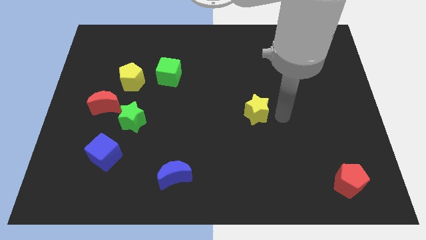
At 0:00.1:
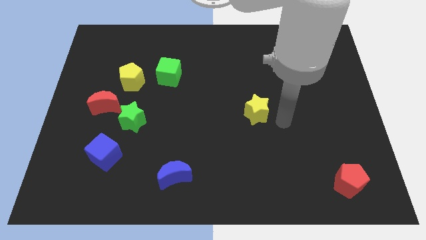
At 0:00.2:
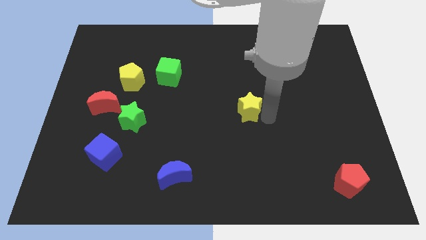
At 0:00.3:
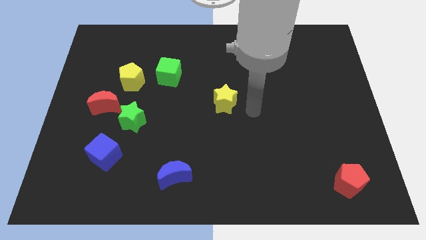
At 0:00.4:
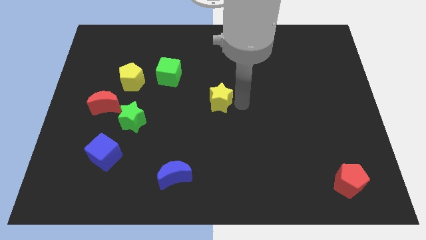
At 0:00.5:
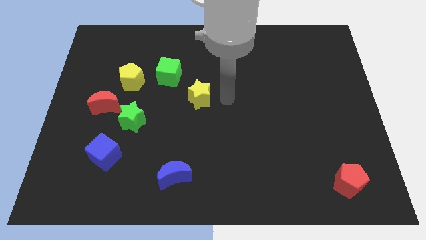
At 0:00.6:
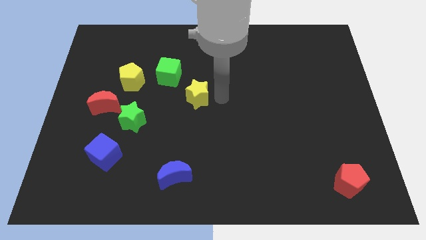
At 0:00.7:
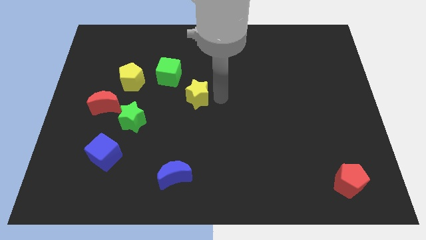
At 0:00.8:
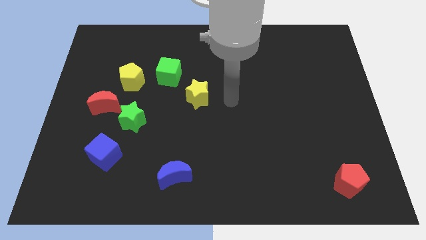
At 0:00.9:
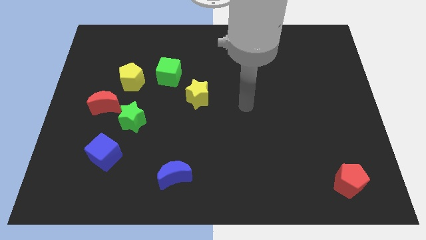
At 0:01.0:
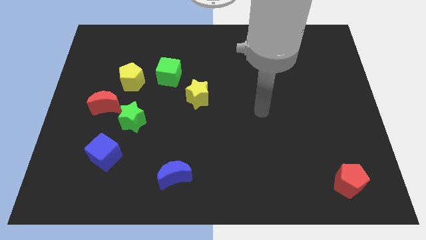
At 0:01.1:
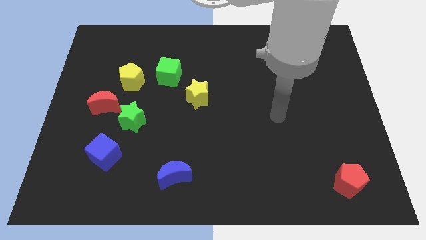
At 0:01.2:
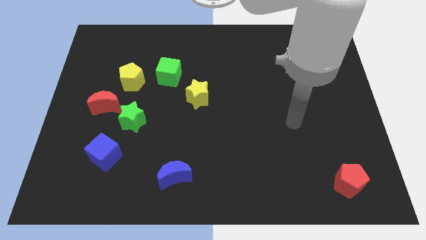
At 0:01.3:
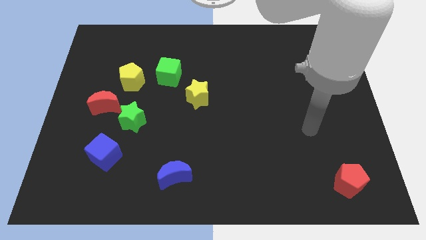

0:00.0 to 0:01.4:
place the yellow star diagonally on the bottom right side of the green cube

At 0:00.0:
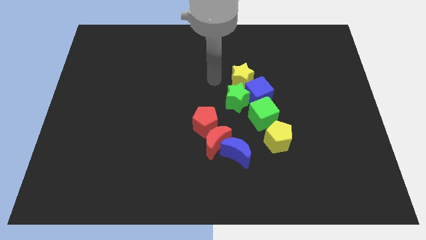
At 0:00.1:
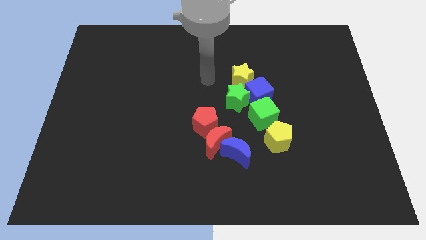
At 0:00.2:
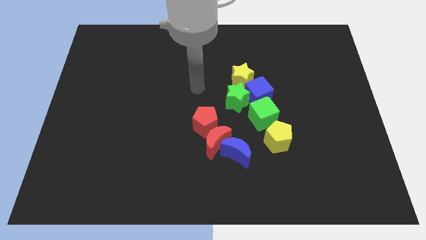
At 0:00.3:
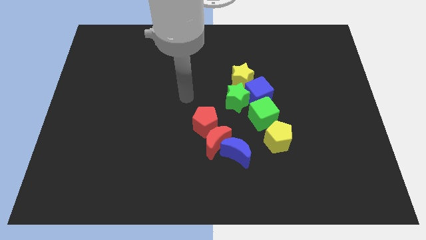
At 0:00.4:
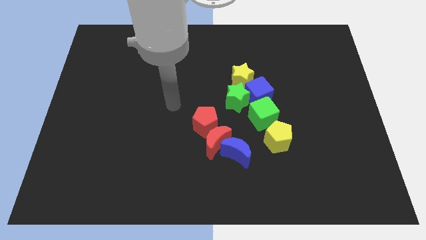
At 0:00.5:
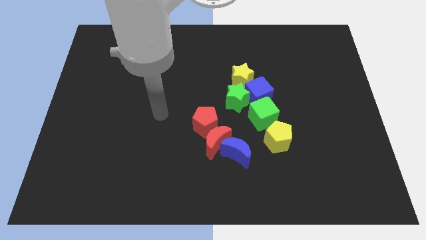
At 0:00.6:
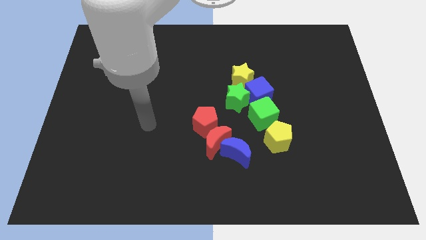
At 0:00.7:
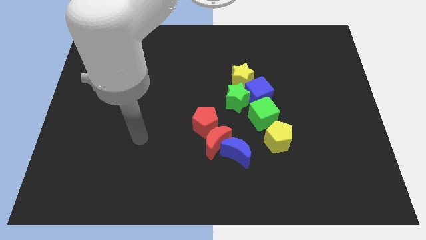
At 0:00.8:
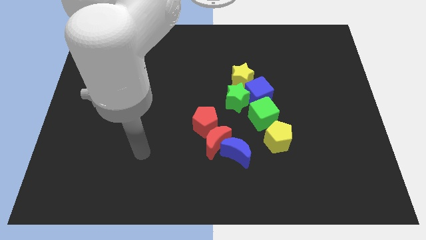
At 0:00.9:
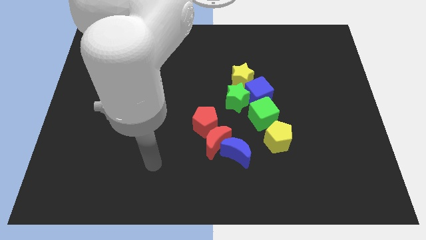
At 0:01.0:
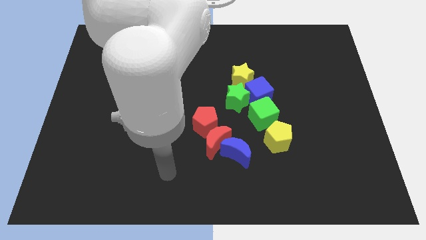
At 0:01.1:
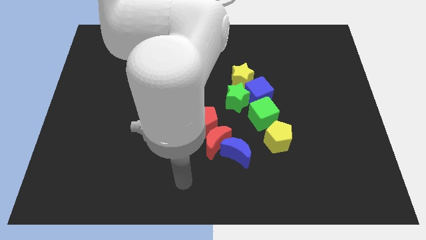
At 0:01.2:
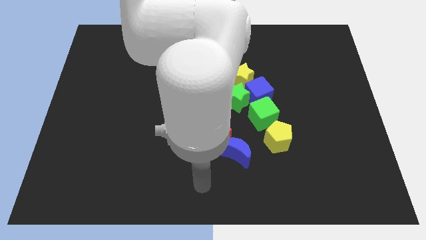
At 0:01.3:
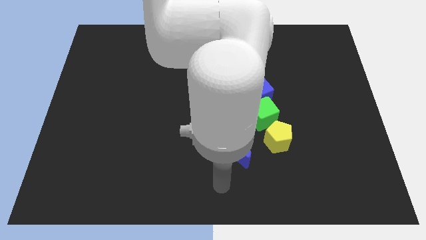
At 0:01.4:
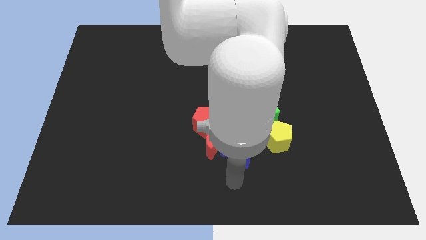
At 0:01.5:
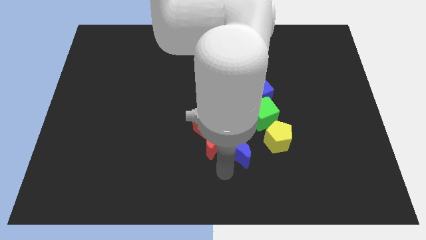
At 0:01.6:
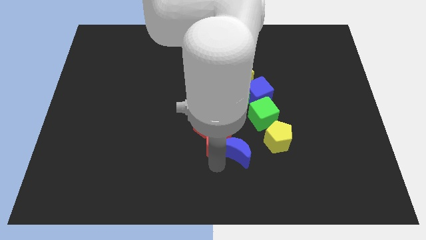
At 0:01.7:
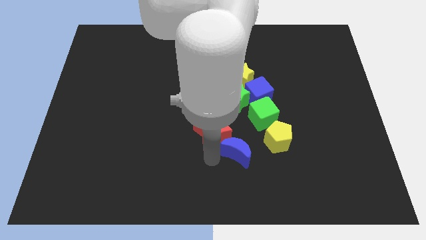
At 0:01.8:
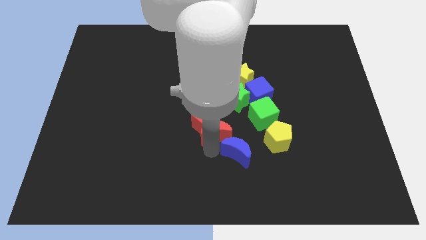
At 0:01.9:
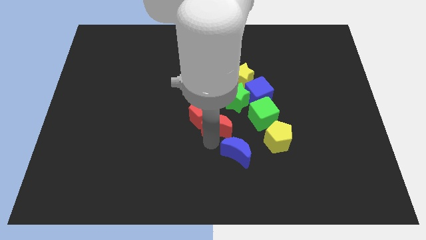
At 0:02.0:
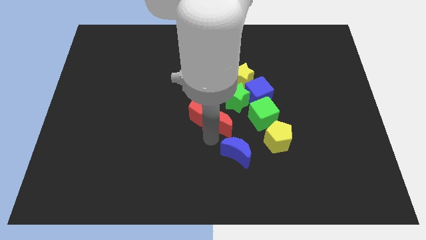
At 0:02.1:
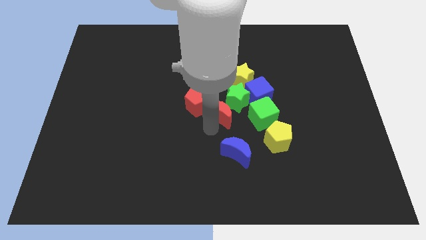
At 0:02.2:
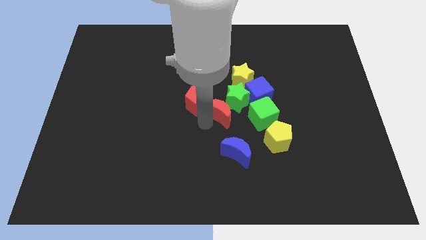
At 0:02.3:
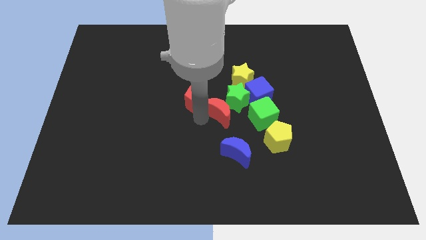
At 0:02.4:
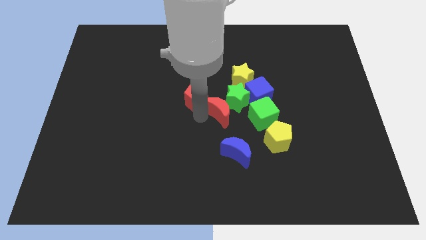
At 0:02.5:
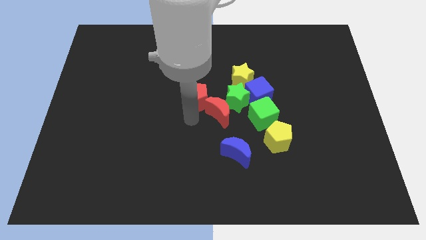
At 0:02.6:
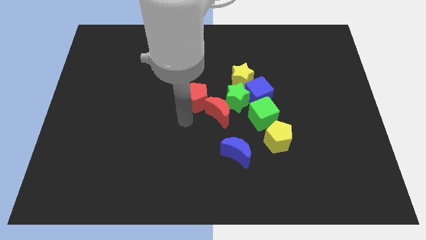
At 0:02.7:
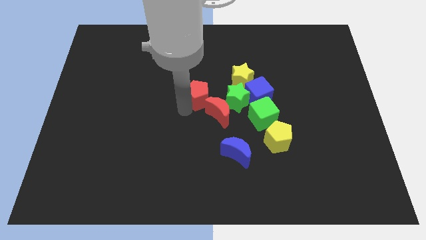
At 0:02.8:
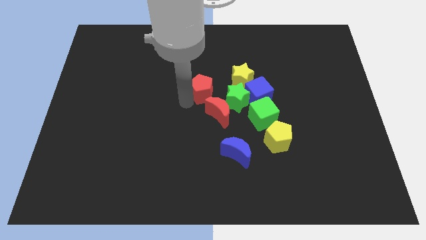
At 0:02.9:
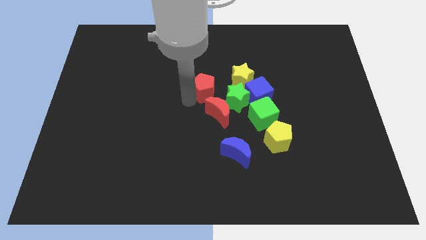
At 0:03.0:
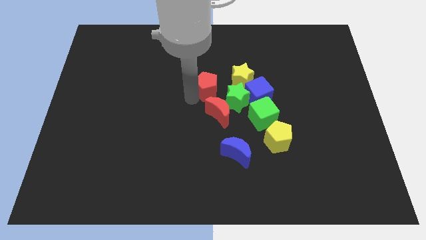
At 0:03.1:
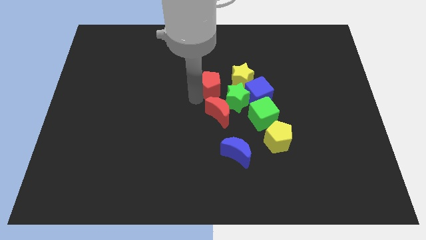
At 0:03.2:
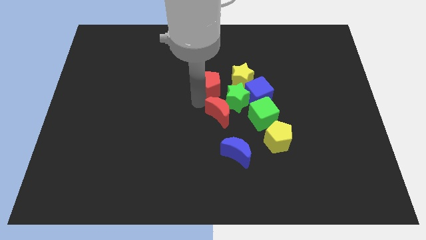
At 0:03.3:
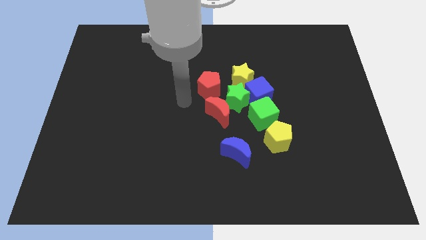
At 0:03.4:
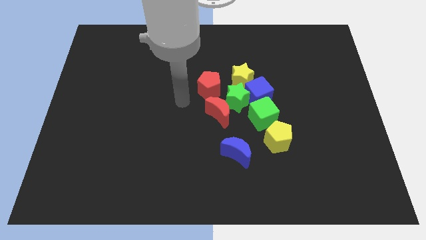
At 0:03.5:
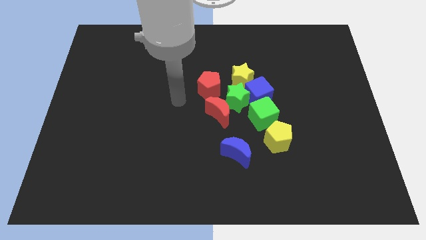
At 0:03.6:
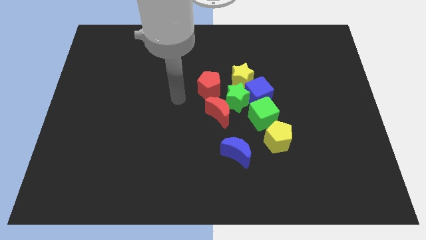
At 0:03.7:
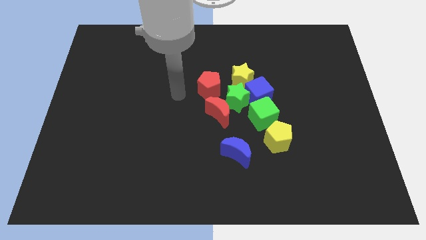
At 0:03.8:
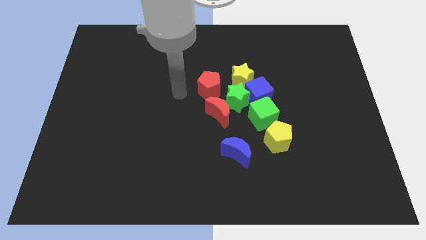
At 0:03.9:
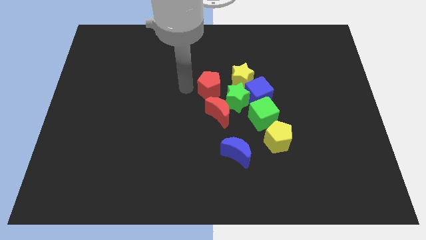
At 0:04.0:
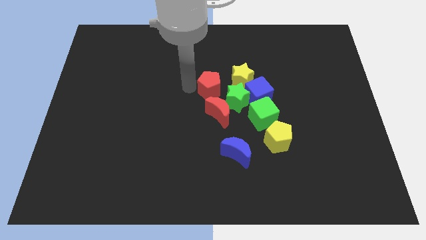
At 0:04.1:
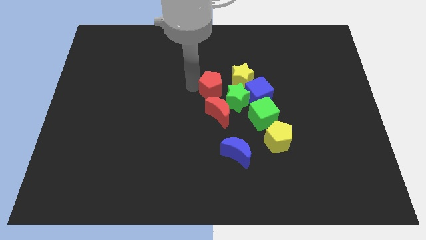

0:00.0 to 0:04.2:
push the red crescentred pentagon away from the blue crescent

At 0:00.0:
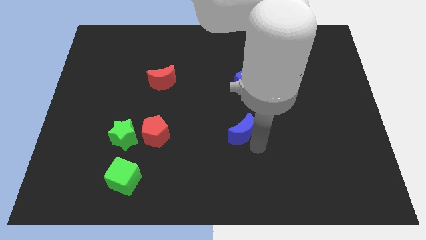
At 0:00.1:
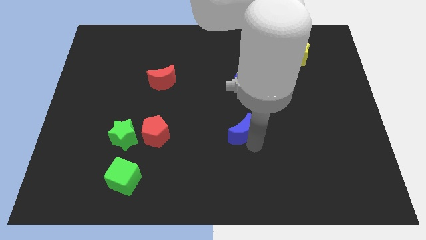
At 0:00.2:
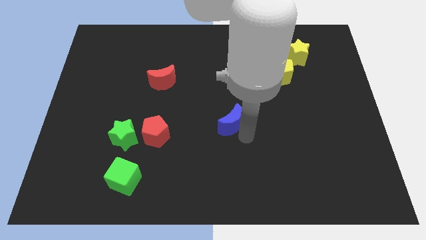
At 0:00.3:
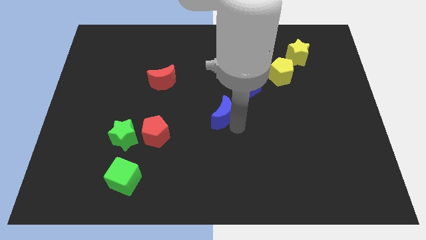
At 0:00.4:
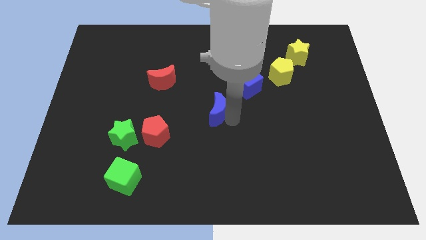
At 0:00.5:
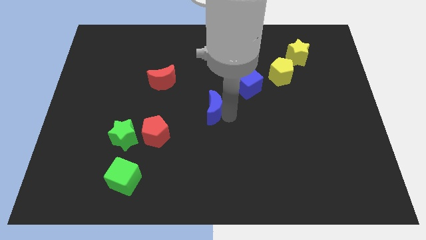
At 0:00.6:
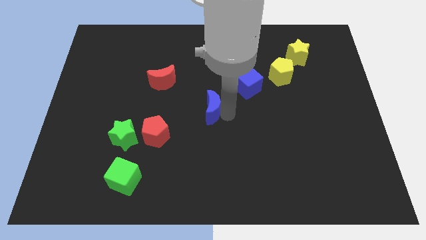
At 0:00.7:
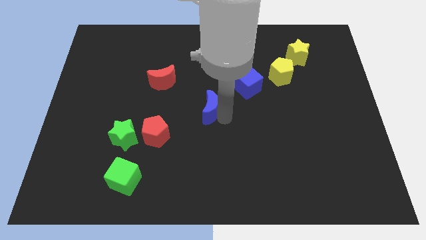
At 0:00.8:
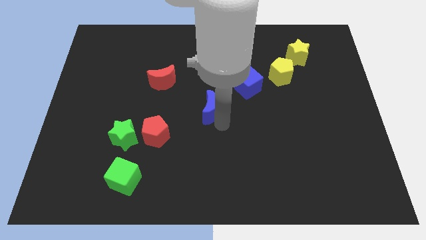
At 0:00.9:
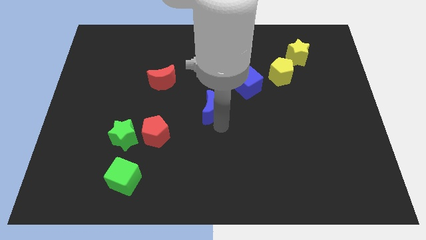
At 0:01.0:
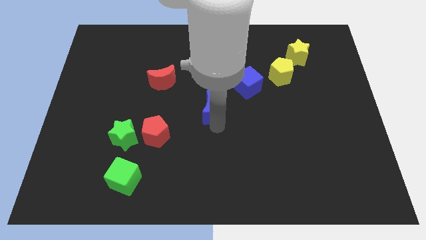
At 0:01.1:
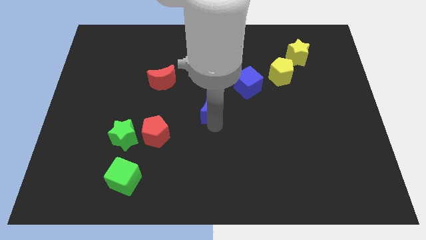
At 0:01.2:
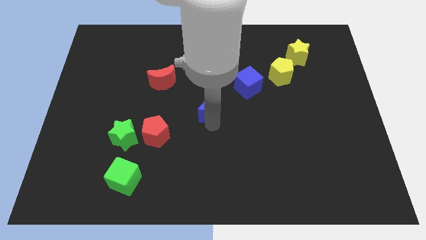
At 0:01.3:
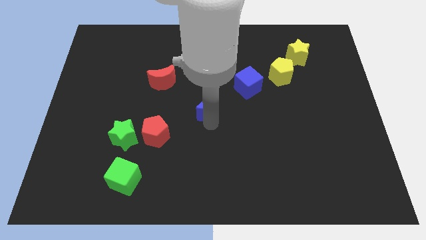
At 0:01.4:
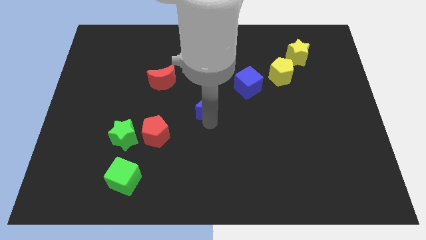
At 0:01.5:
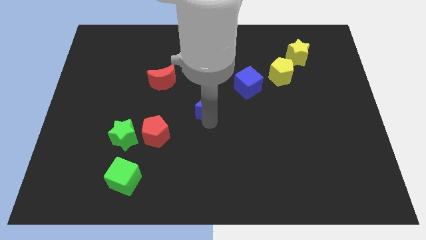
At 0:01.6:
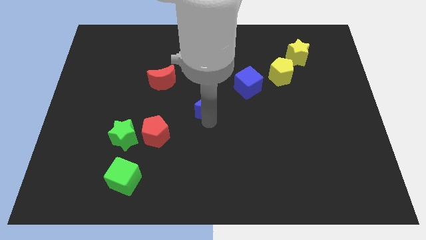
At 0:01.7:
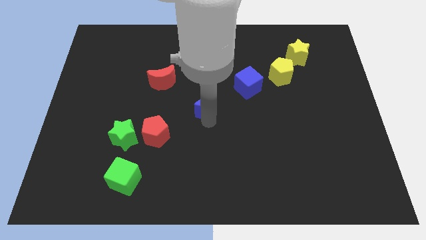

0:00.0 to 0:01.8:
push the blue crescent to the center of the board

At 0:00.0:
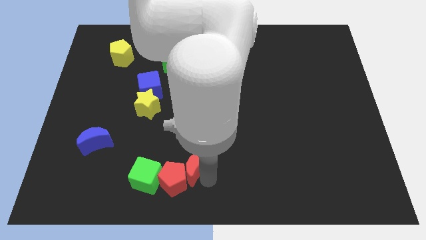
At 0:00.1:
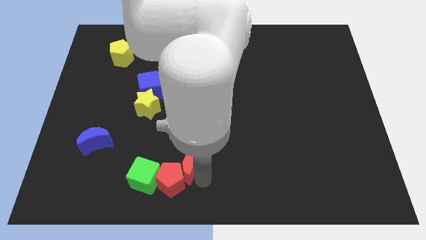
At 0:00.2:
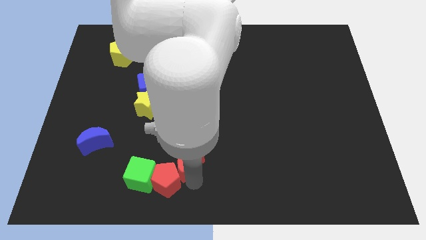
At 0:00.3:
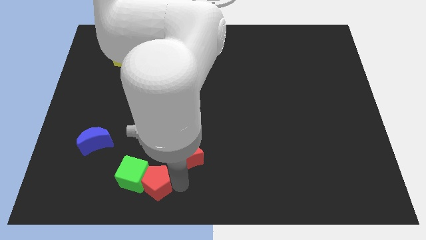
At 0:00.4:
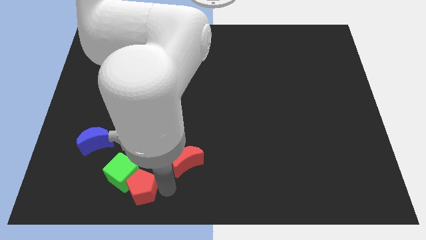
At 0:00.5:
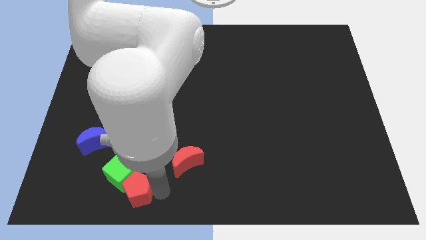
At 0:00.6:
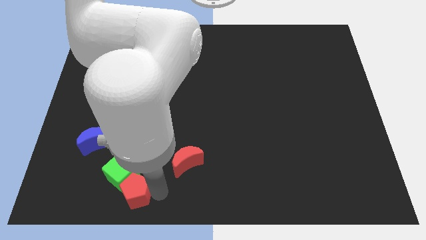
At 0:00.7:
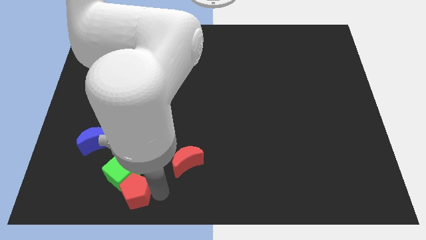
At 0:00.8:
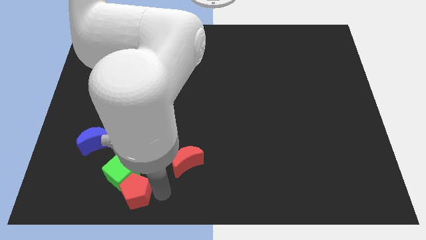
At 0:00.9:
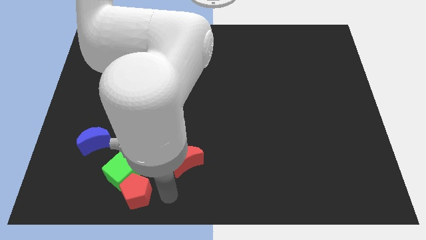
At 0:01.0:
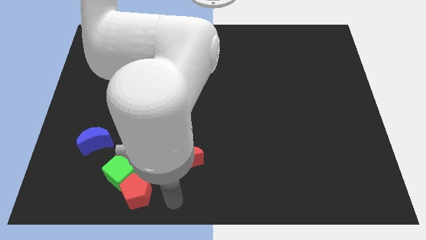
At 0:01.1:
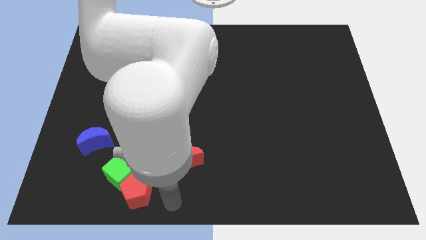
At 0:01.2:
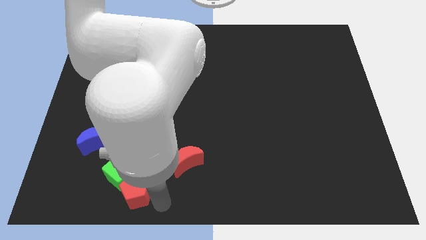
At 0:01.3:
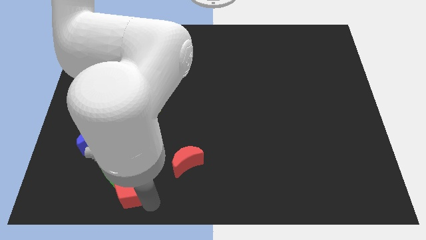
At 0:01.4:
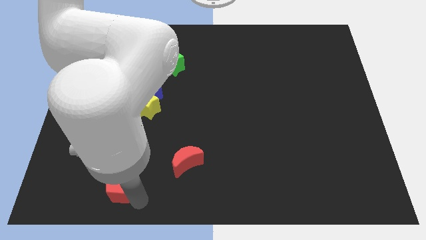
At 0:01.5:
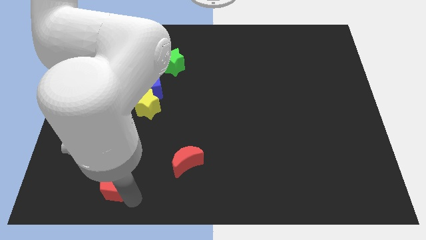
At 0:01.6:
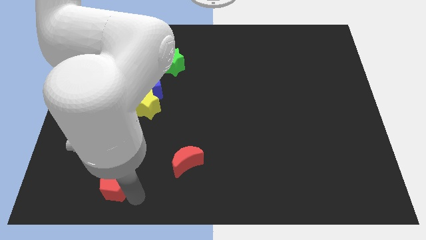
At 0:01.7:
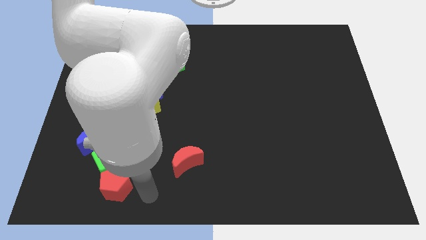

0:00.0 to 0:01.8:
place red pentagon to the bottom of the green cube
